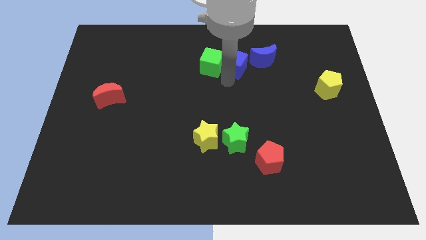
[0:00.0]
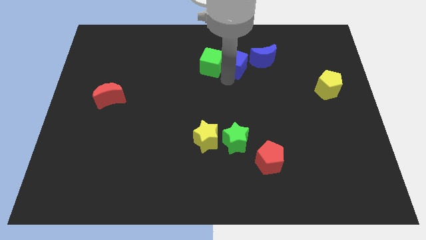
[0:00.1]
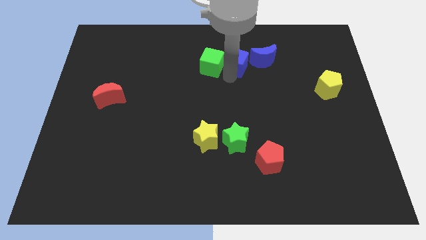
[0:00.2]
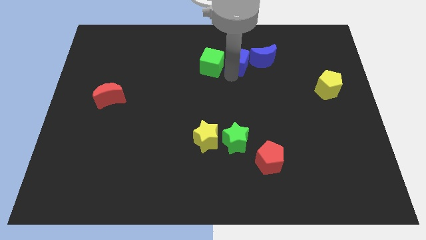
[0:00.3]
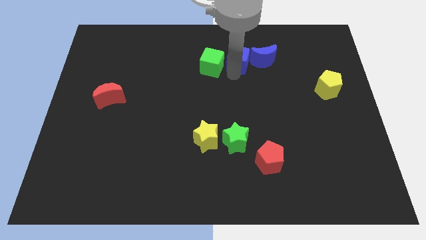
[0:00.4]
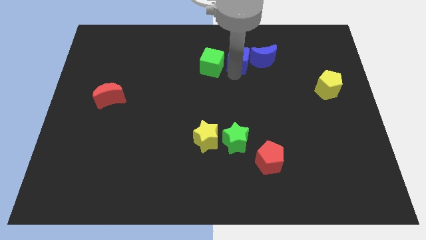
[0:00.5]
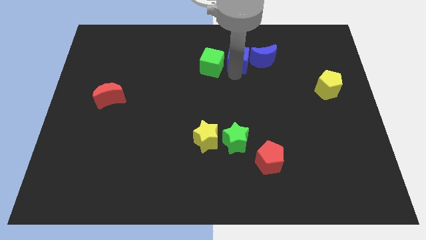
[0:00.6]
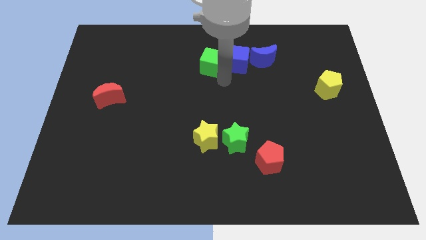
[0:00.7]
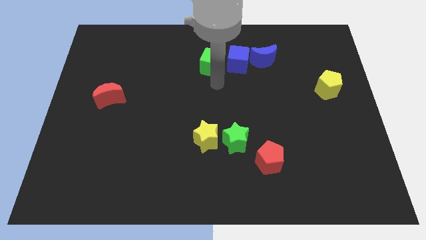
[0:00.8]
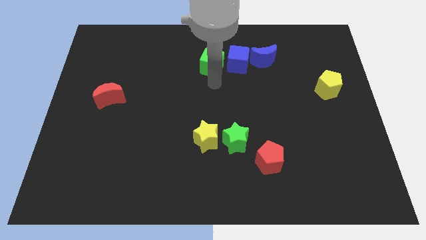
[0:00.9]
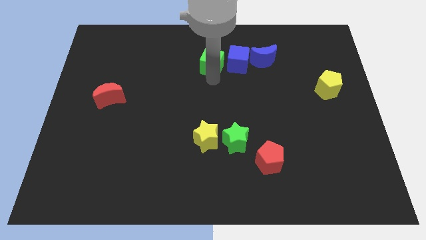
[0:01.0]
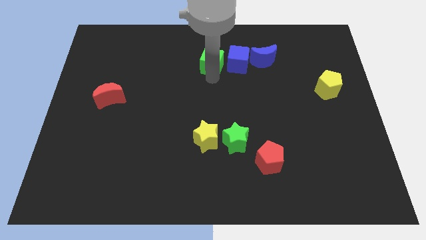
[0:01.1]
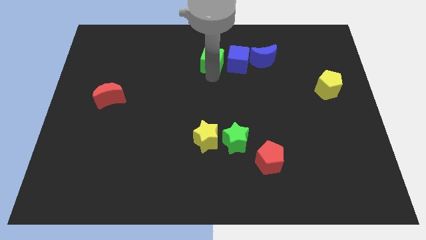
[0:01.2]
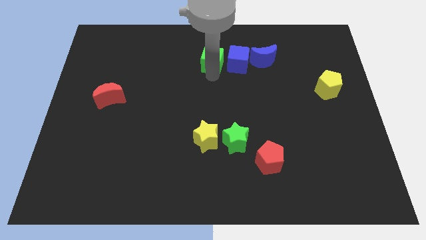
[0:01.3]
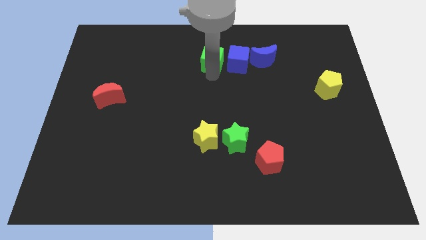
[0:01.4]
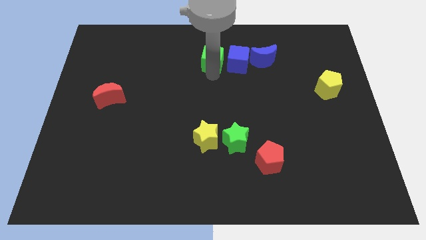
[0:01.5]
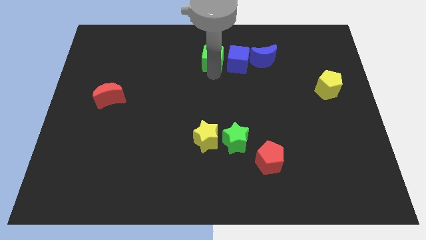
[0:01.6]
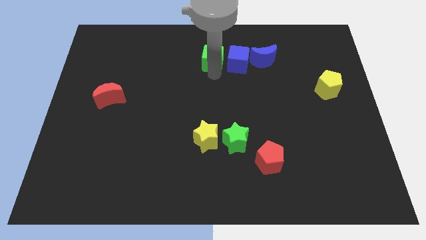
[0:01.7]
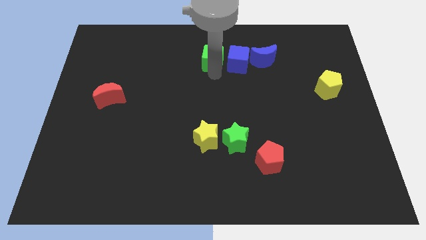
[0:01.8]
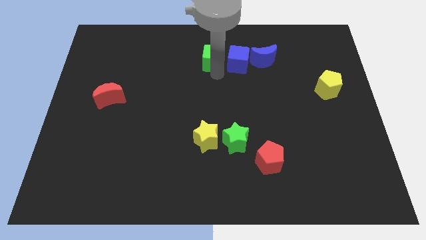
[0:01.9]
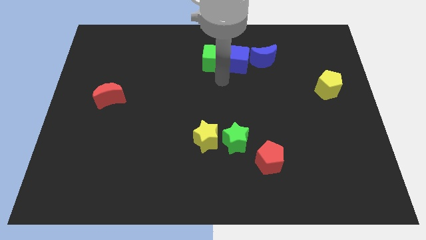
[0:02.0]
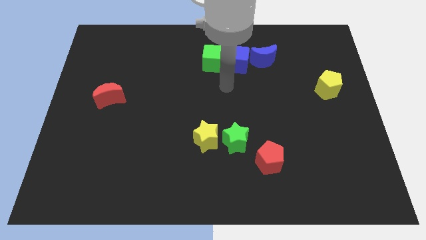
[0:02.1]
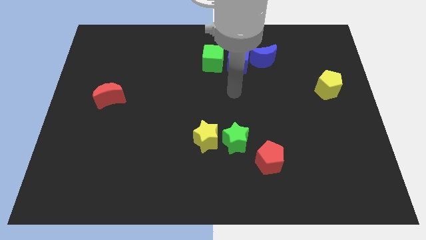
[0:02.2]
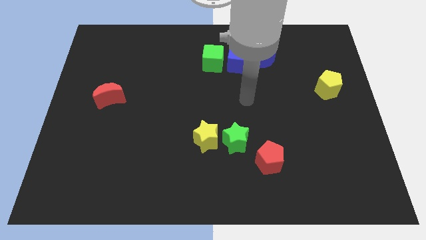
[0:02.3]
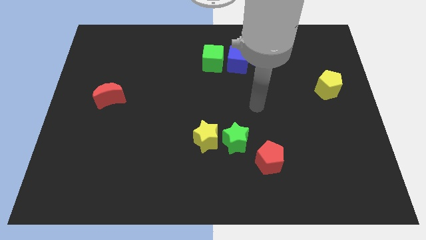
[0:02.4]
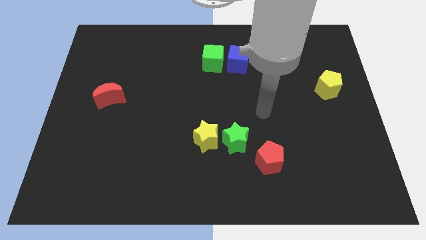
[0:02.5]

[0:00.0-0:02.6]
move green cube and blue cube towards top

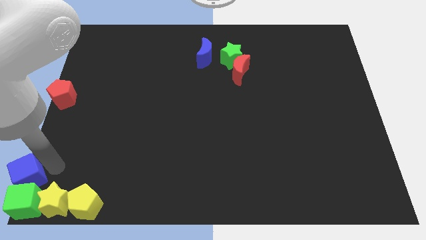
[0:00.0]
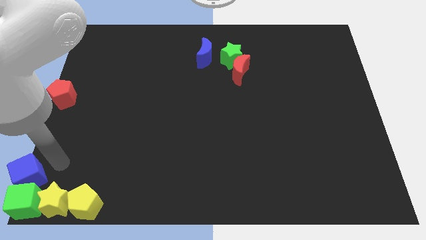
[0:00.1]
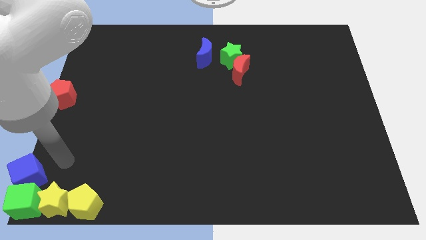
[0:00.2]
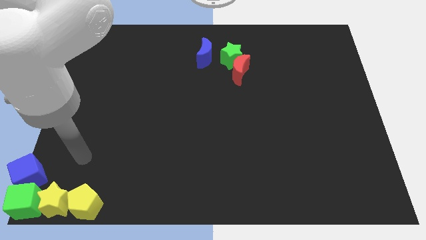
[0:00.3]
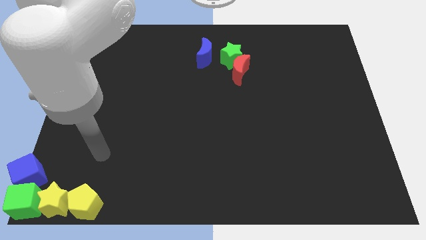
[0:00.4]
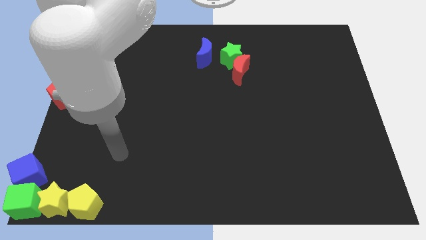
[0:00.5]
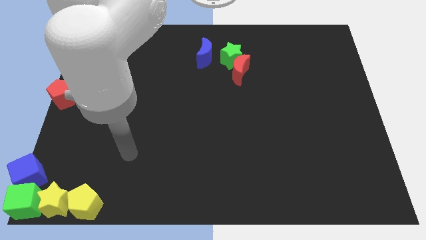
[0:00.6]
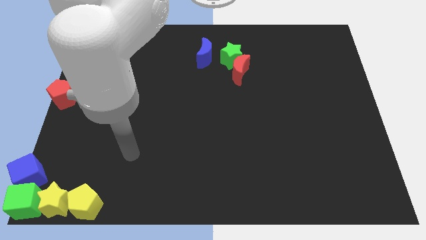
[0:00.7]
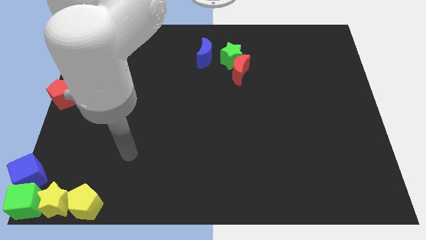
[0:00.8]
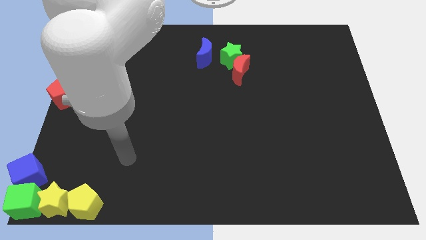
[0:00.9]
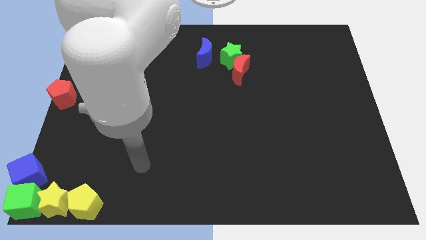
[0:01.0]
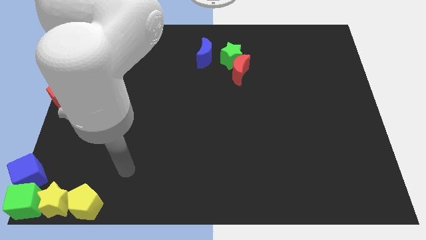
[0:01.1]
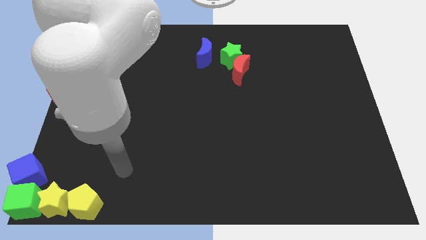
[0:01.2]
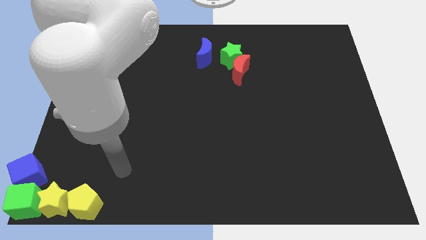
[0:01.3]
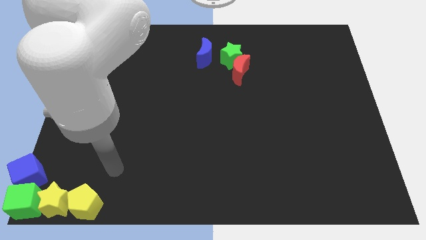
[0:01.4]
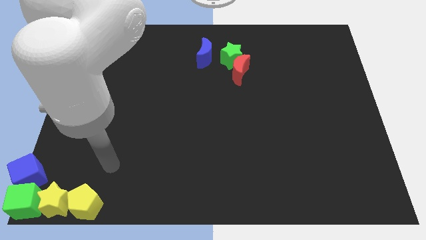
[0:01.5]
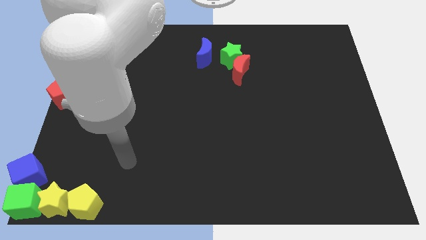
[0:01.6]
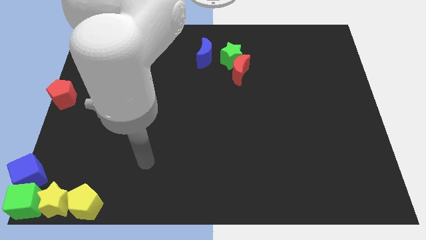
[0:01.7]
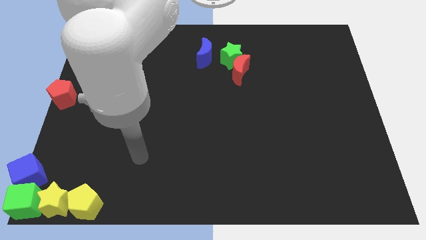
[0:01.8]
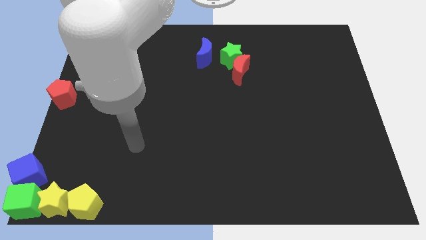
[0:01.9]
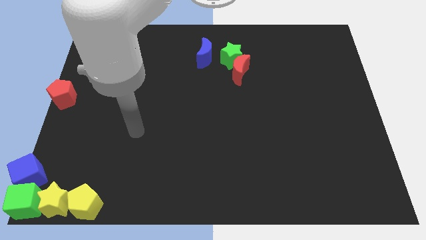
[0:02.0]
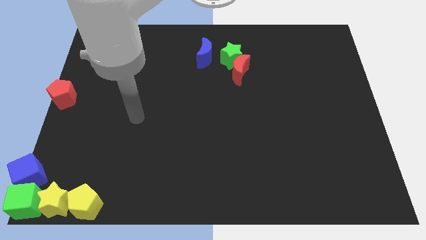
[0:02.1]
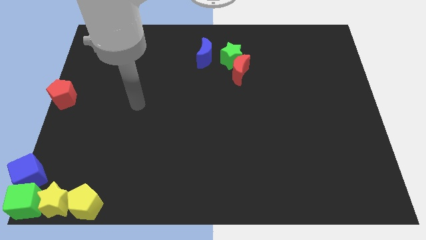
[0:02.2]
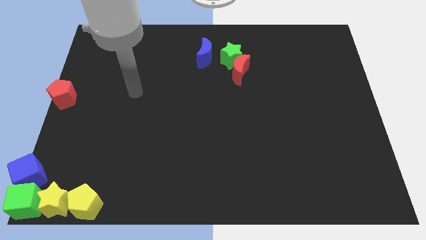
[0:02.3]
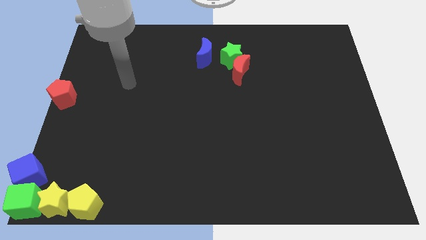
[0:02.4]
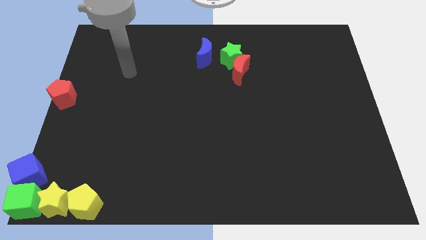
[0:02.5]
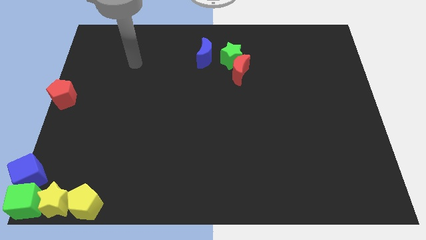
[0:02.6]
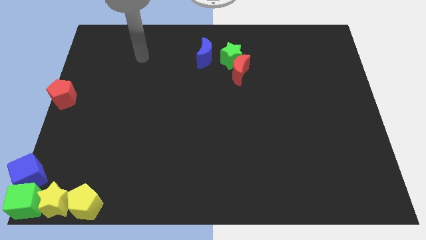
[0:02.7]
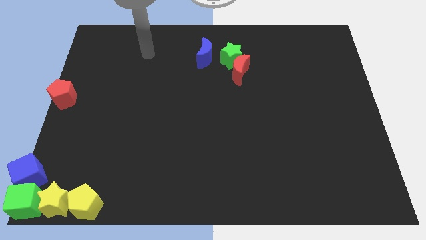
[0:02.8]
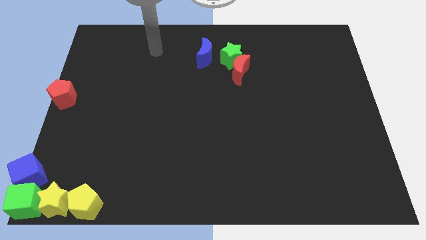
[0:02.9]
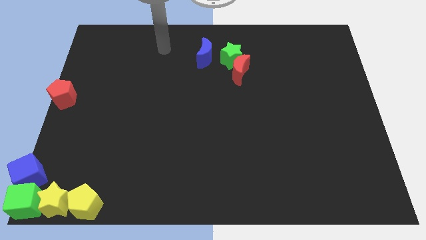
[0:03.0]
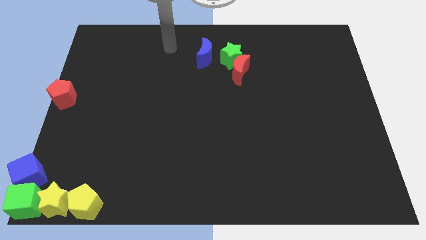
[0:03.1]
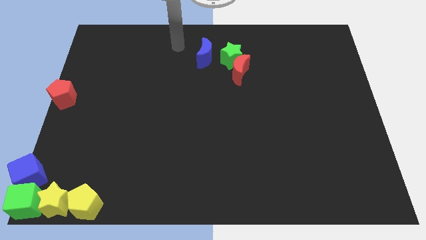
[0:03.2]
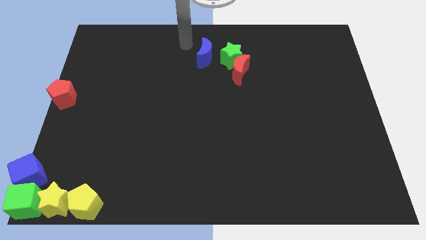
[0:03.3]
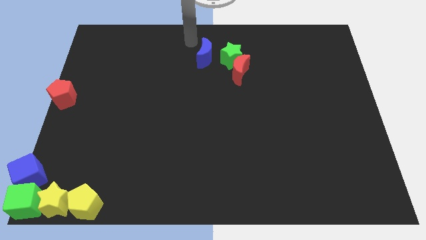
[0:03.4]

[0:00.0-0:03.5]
move your arm towards the top center of the board

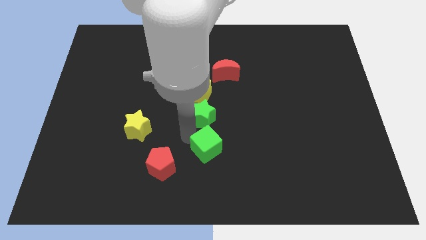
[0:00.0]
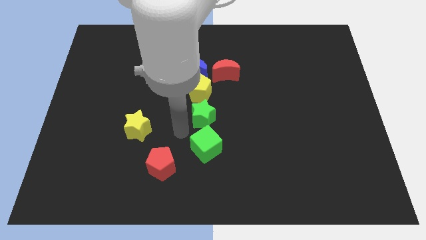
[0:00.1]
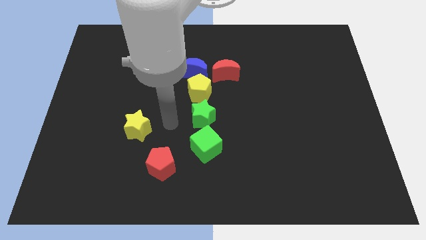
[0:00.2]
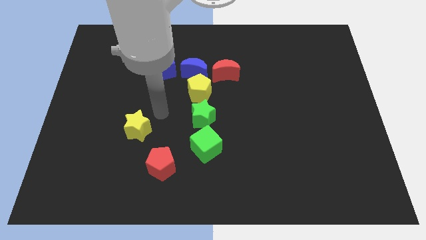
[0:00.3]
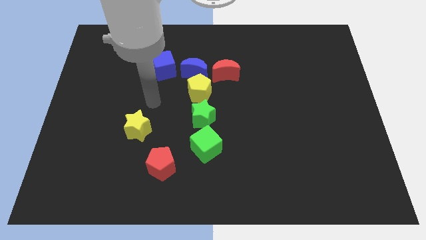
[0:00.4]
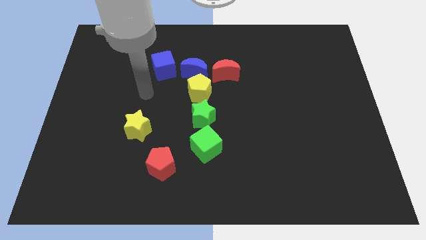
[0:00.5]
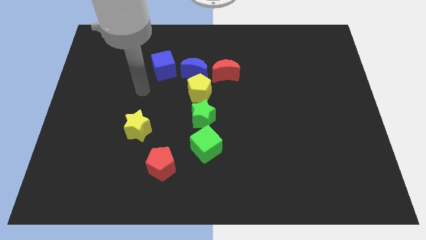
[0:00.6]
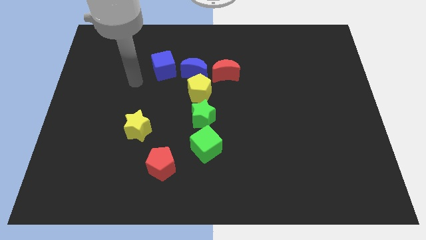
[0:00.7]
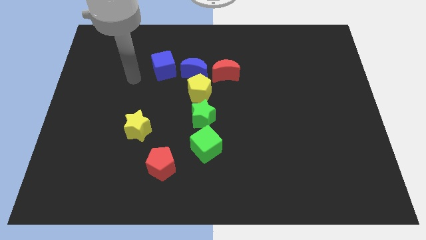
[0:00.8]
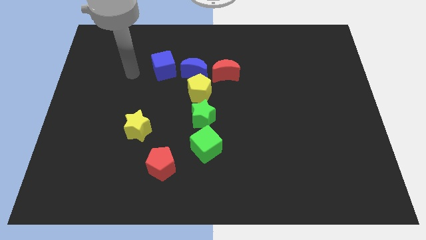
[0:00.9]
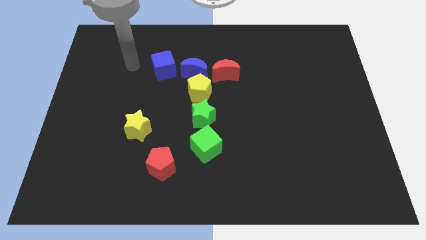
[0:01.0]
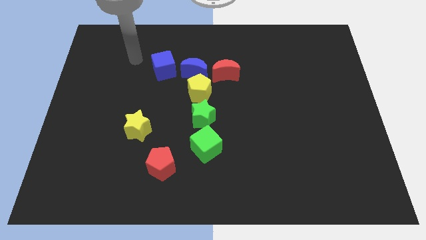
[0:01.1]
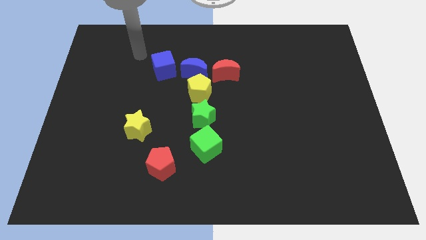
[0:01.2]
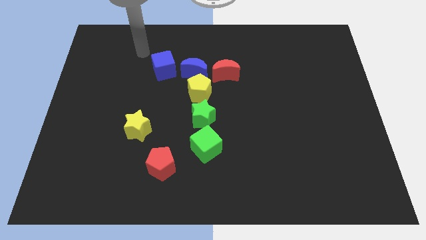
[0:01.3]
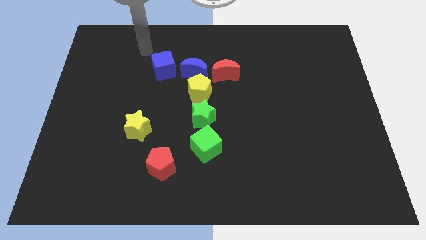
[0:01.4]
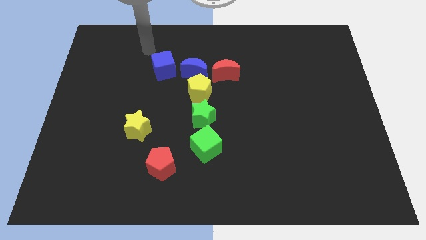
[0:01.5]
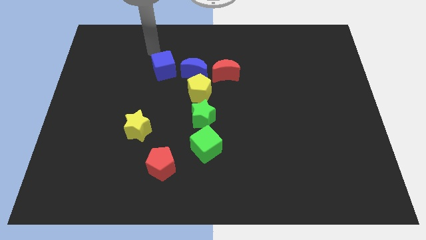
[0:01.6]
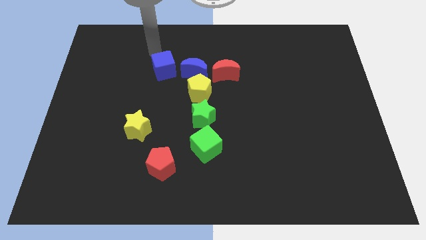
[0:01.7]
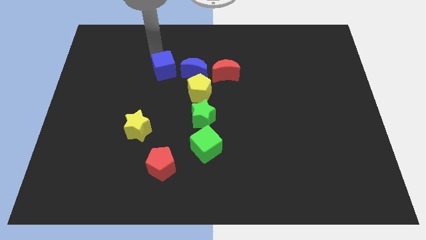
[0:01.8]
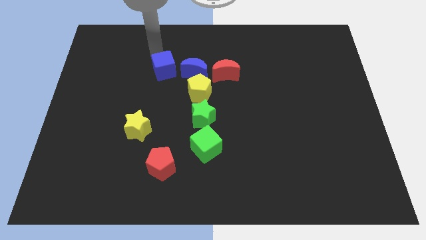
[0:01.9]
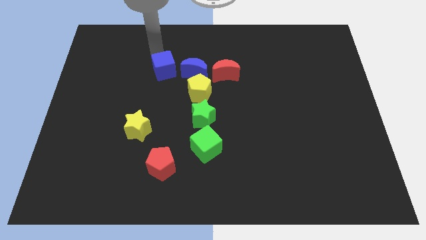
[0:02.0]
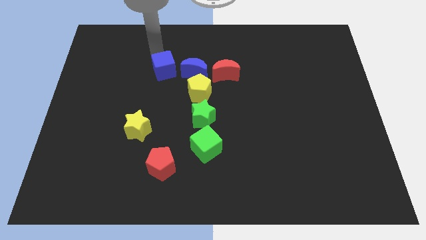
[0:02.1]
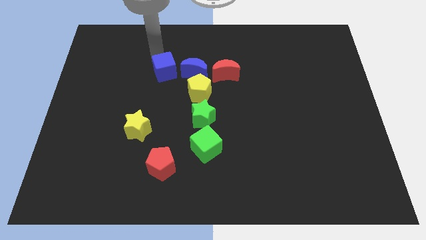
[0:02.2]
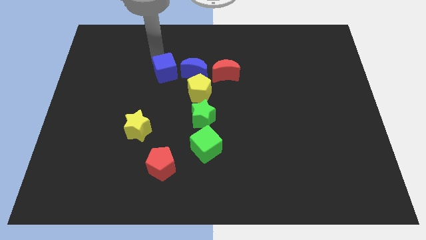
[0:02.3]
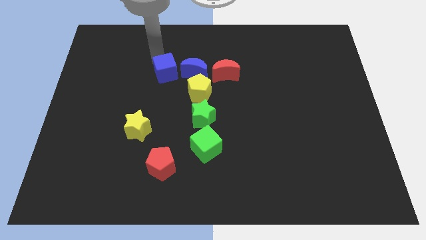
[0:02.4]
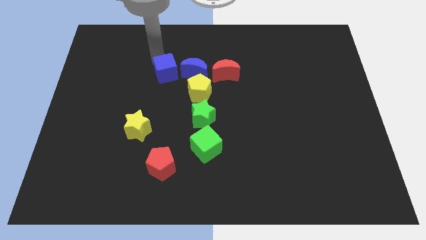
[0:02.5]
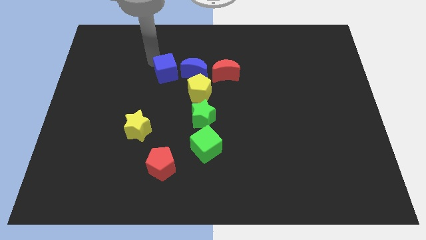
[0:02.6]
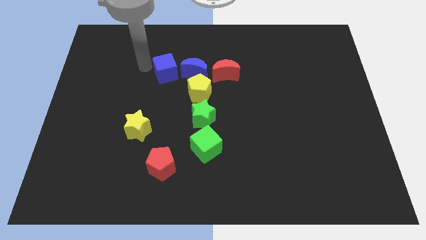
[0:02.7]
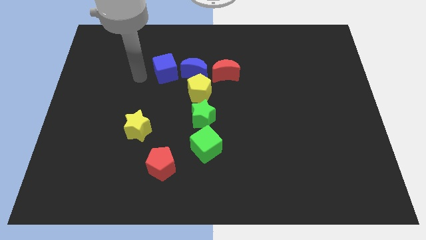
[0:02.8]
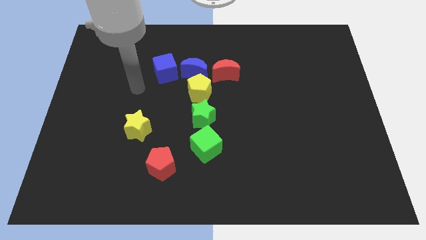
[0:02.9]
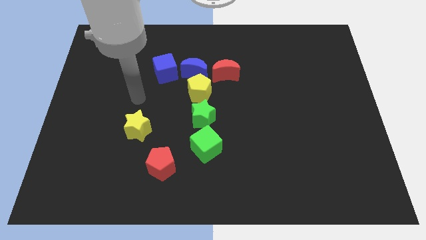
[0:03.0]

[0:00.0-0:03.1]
place the blue cube diagonally to the top left of the yellow pentagon
